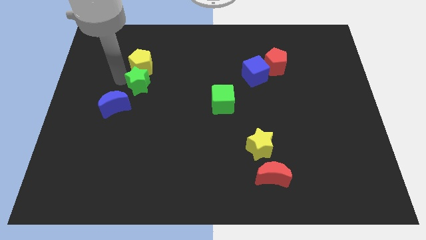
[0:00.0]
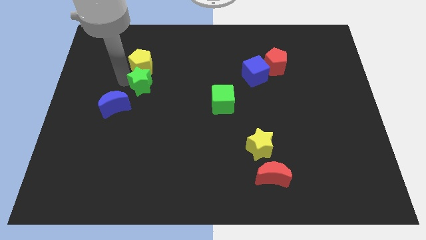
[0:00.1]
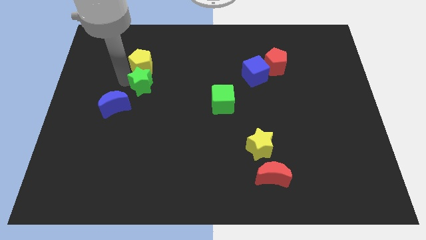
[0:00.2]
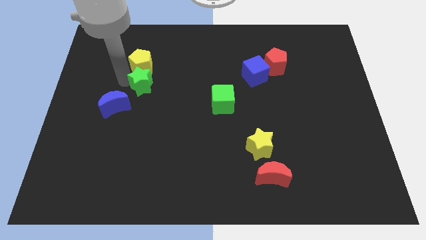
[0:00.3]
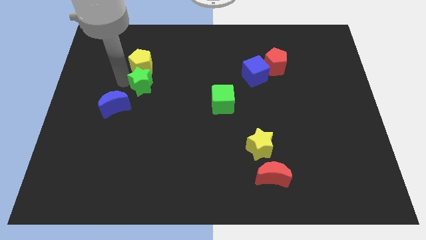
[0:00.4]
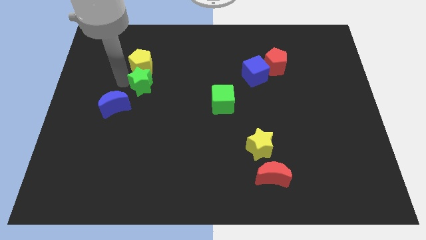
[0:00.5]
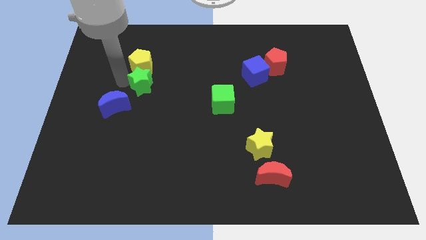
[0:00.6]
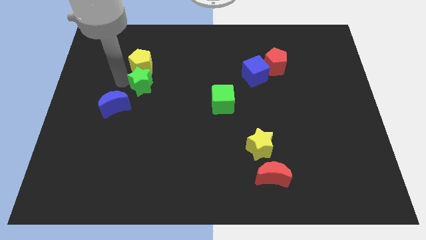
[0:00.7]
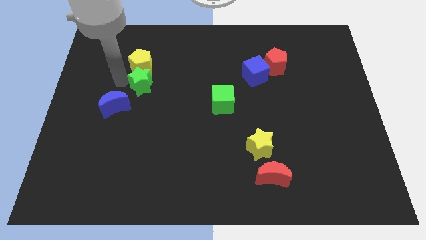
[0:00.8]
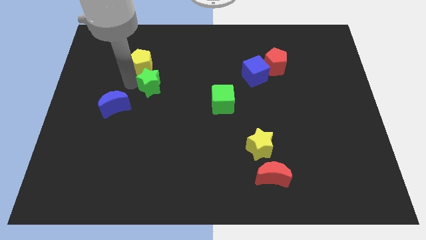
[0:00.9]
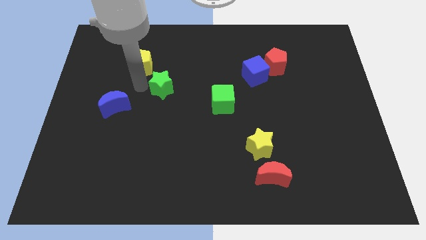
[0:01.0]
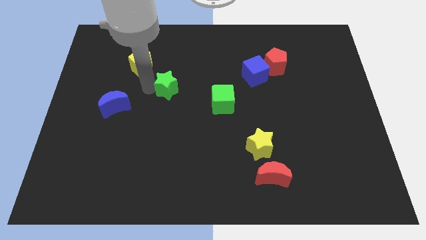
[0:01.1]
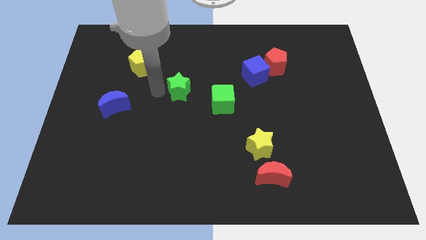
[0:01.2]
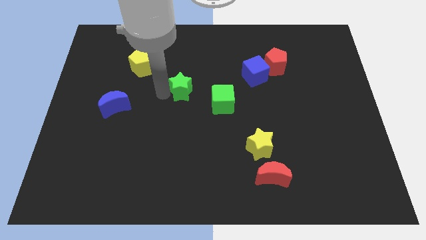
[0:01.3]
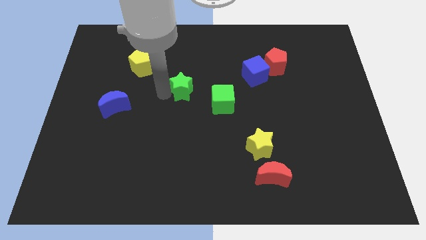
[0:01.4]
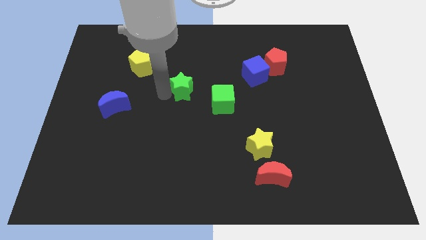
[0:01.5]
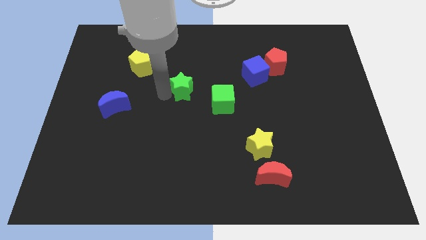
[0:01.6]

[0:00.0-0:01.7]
separate the green star from the yellow pentagon

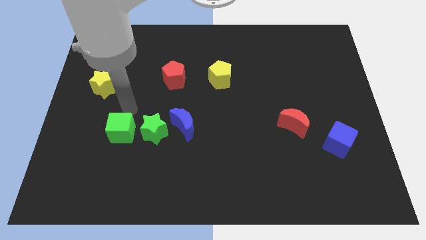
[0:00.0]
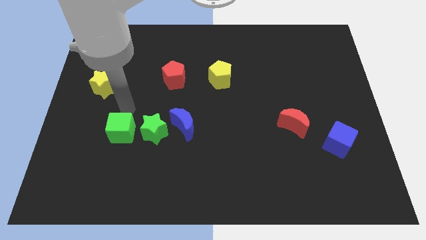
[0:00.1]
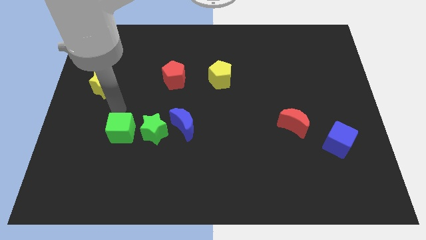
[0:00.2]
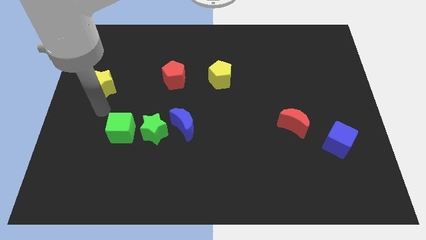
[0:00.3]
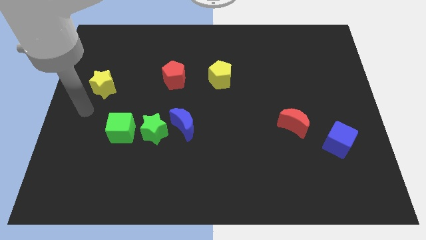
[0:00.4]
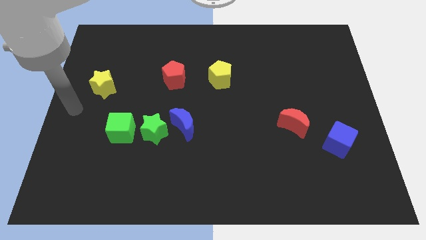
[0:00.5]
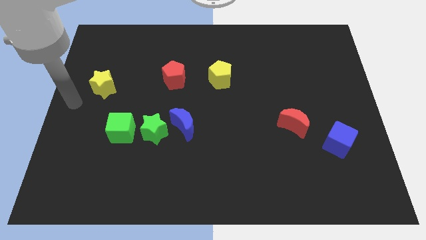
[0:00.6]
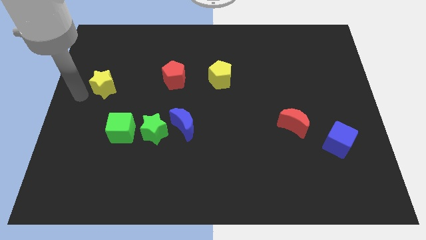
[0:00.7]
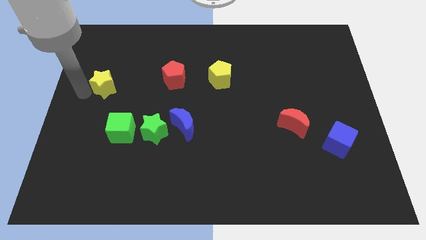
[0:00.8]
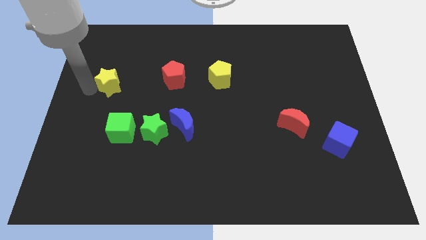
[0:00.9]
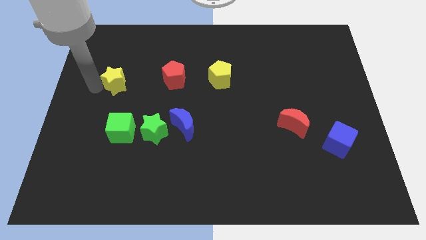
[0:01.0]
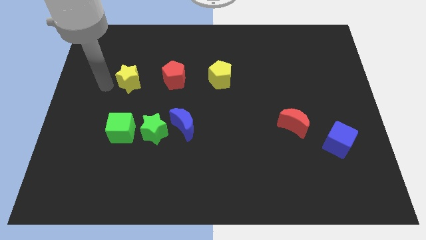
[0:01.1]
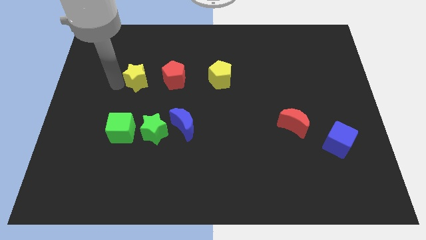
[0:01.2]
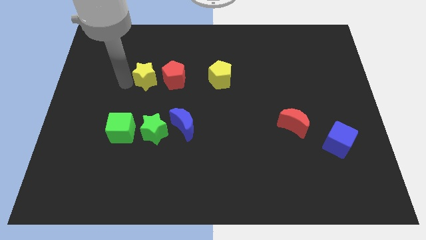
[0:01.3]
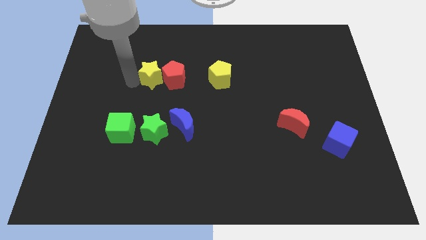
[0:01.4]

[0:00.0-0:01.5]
push the yellow star to the top of the green star

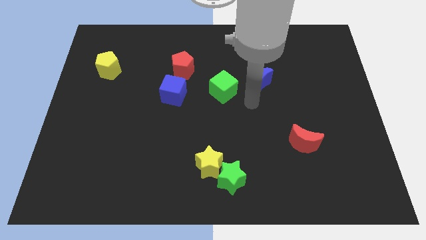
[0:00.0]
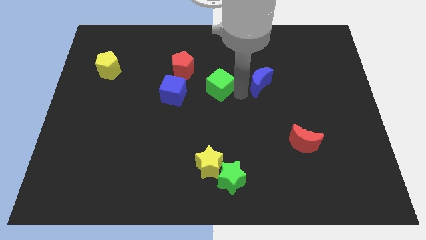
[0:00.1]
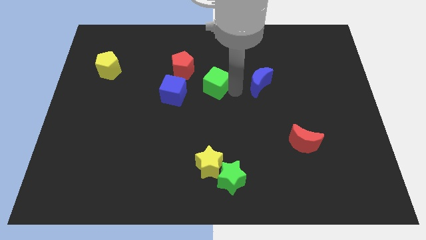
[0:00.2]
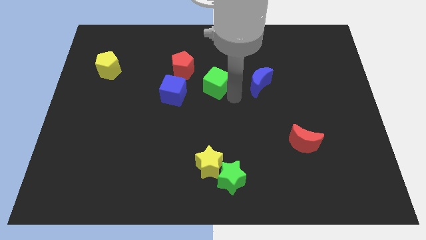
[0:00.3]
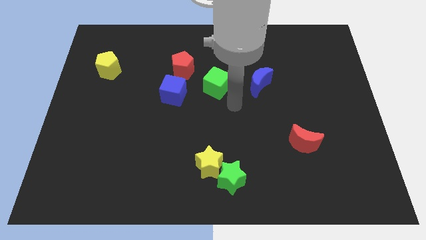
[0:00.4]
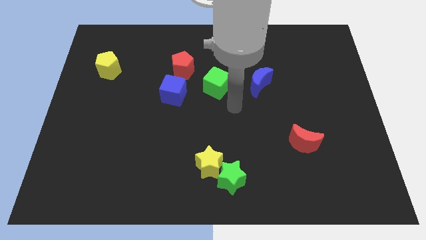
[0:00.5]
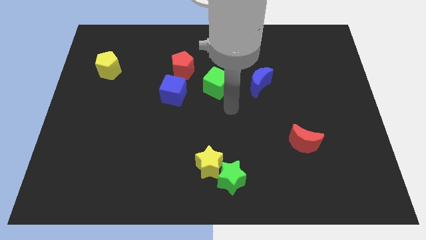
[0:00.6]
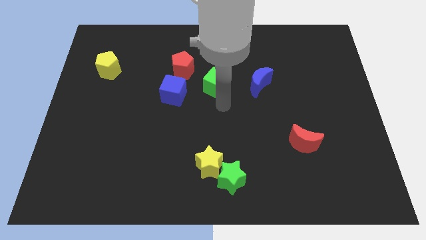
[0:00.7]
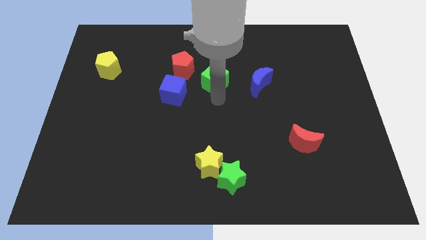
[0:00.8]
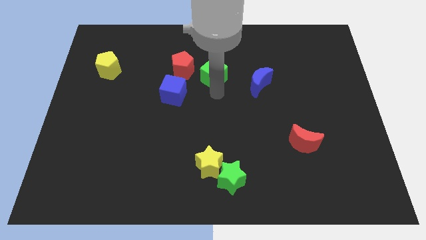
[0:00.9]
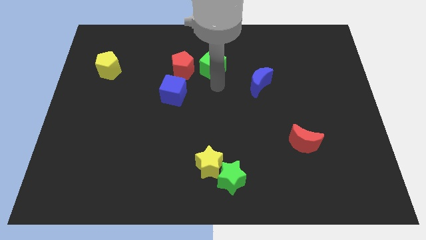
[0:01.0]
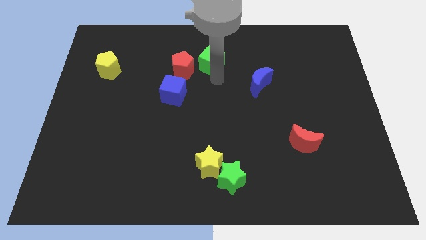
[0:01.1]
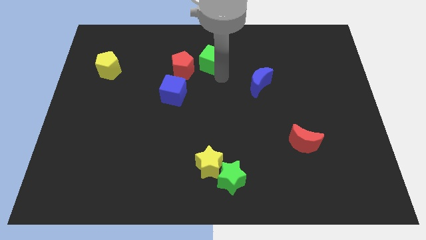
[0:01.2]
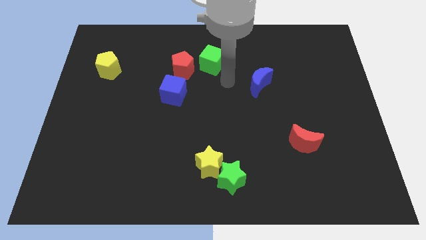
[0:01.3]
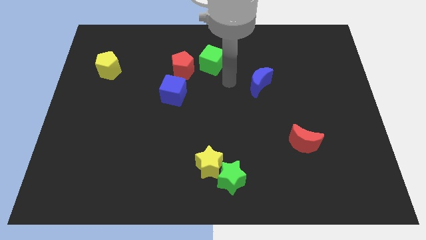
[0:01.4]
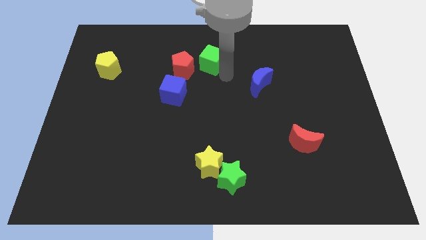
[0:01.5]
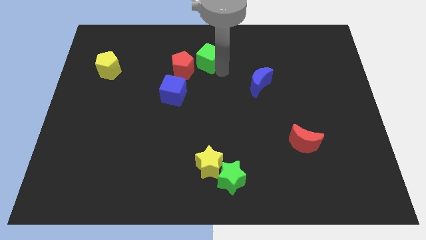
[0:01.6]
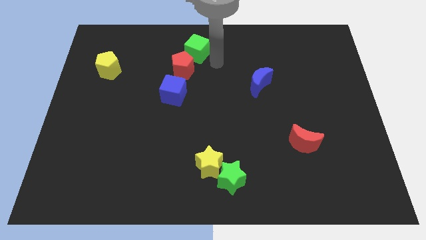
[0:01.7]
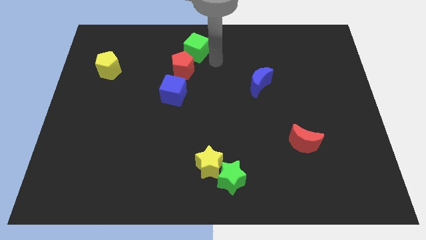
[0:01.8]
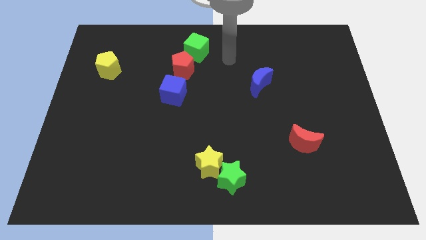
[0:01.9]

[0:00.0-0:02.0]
place the green cube to the top of red pentagon

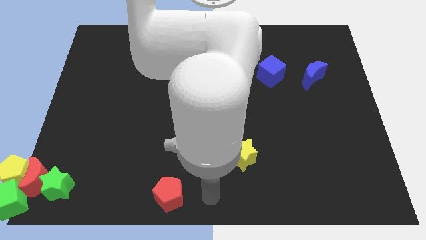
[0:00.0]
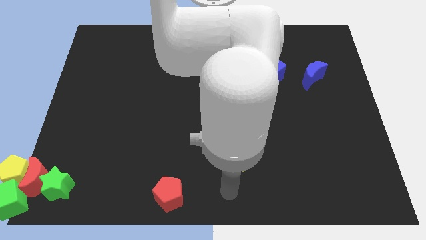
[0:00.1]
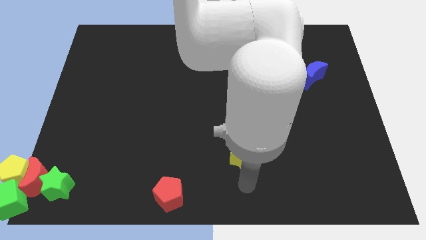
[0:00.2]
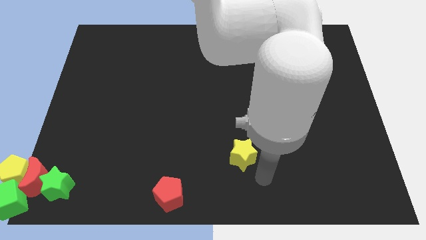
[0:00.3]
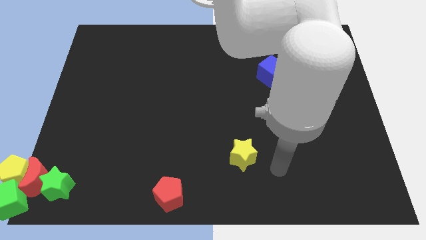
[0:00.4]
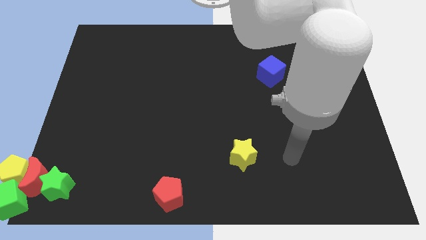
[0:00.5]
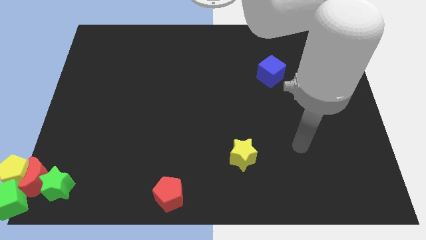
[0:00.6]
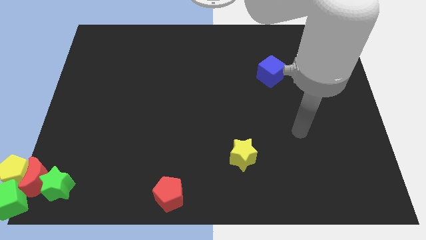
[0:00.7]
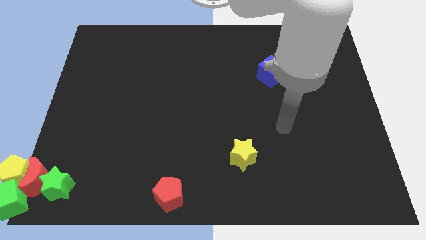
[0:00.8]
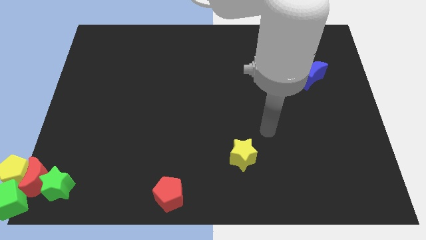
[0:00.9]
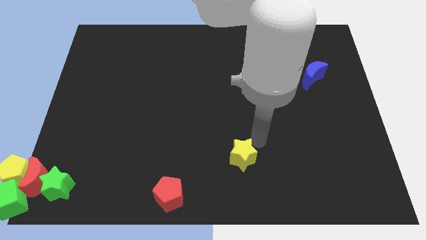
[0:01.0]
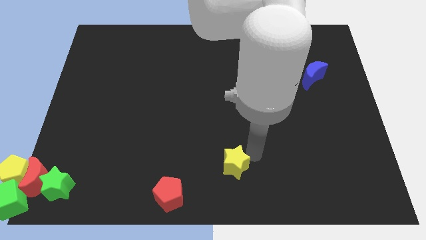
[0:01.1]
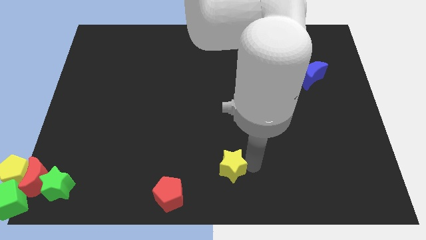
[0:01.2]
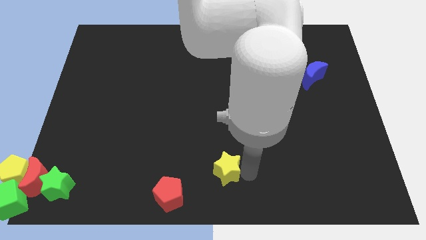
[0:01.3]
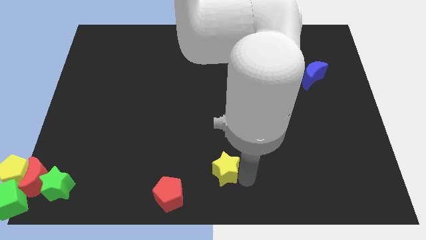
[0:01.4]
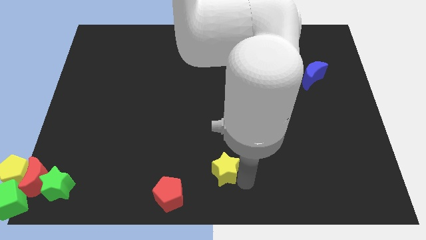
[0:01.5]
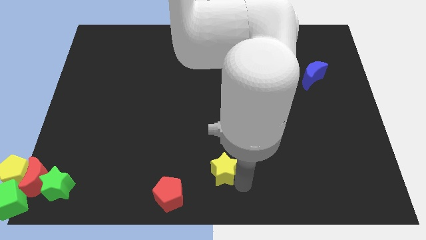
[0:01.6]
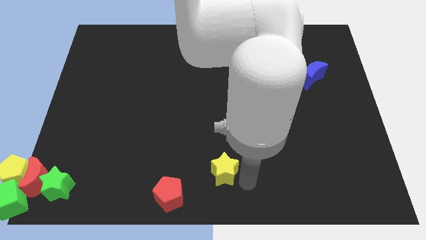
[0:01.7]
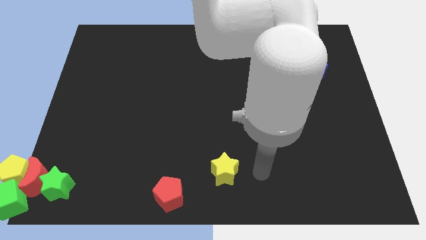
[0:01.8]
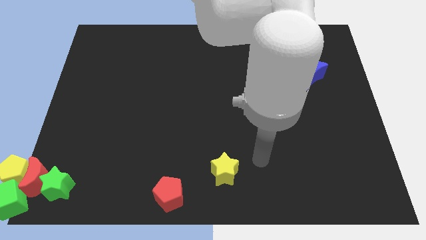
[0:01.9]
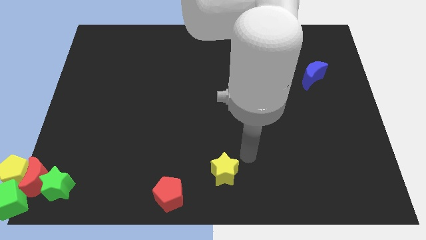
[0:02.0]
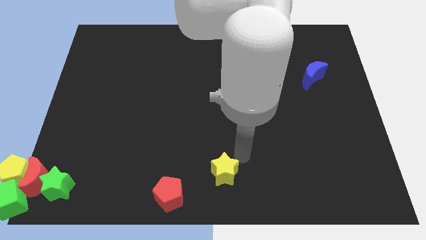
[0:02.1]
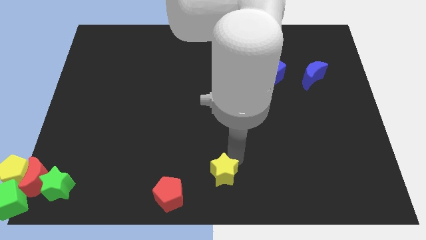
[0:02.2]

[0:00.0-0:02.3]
move the yellow star towards the red pentagon

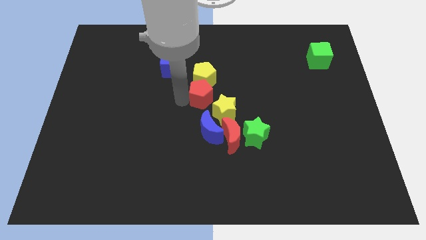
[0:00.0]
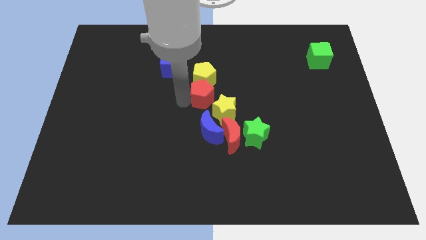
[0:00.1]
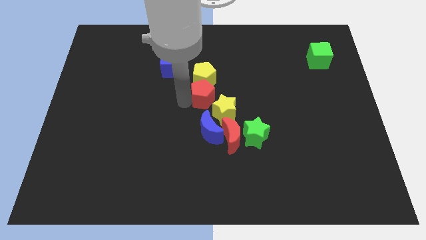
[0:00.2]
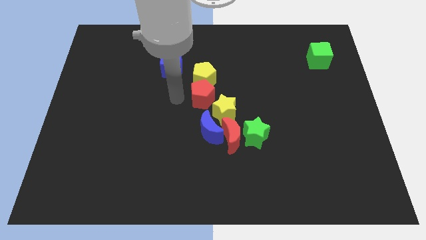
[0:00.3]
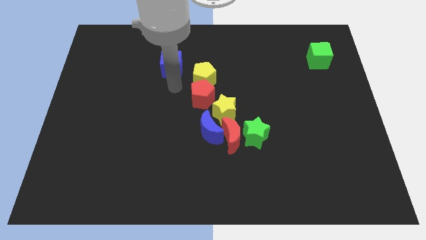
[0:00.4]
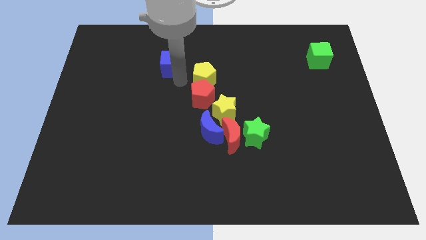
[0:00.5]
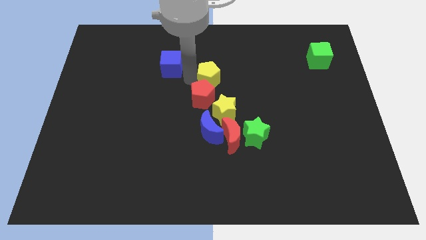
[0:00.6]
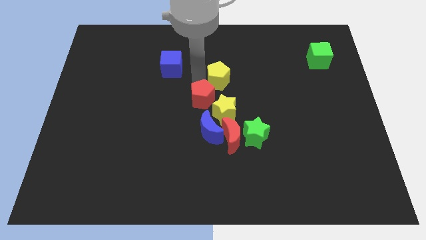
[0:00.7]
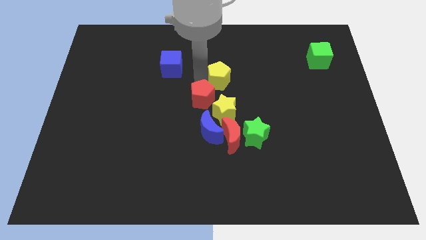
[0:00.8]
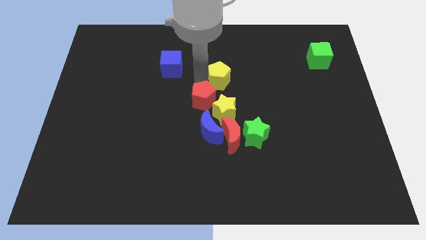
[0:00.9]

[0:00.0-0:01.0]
place yellow pentagon to the top right of red pentagon

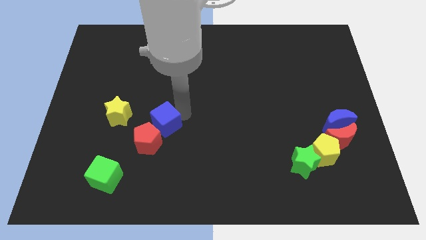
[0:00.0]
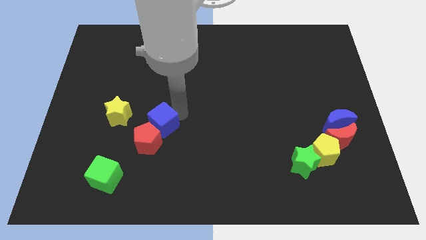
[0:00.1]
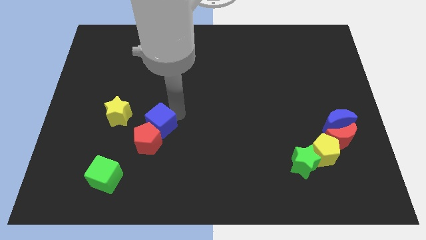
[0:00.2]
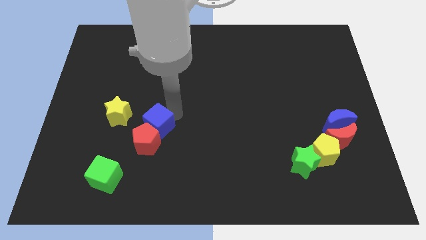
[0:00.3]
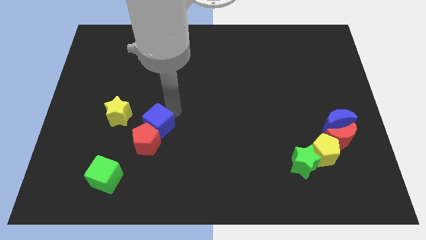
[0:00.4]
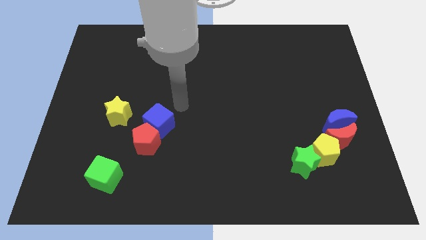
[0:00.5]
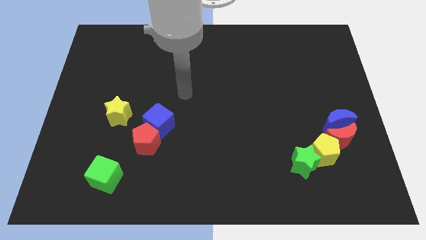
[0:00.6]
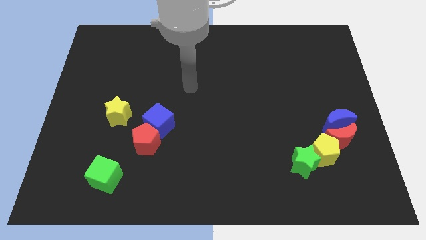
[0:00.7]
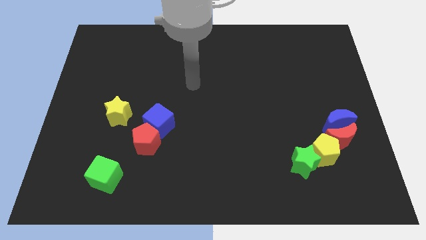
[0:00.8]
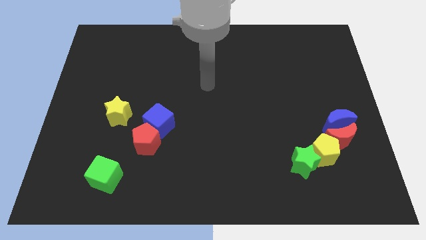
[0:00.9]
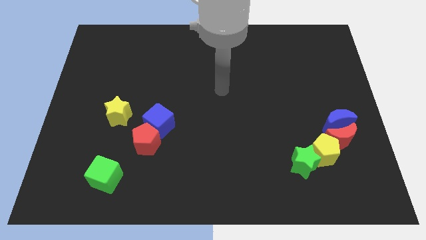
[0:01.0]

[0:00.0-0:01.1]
move the blue block into the red block
